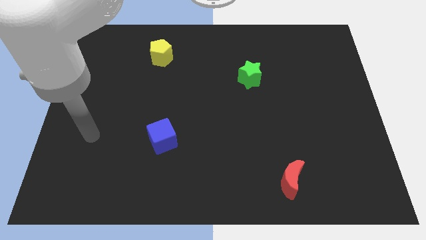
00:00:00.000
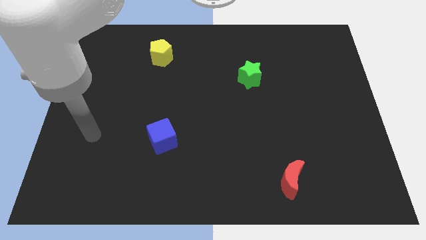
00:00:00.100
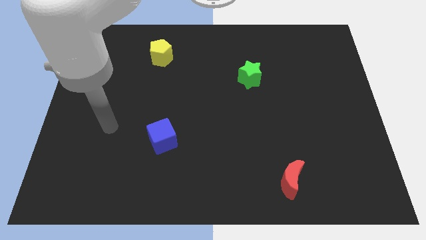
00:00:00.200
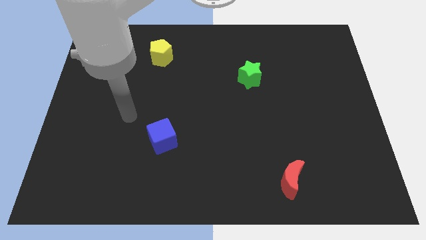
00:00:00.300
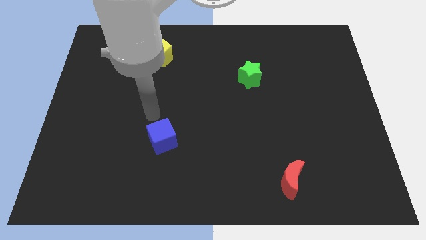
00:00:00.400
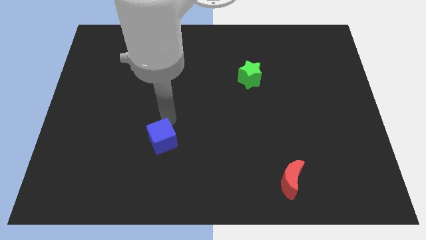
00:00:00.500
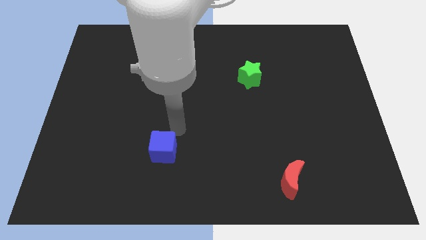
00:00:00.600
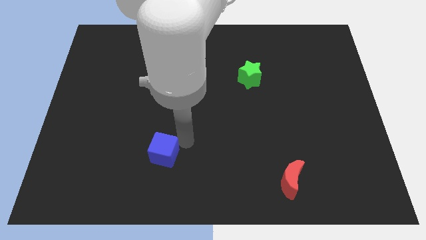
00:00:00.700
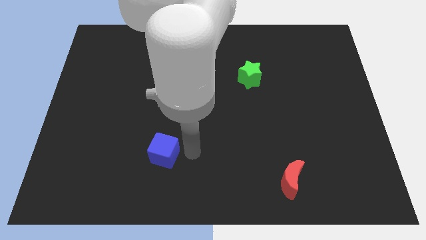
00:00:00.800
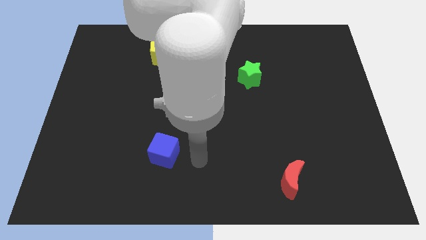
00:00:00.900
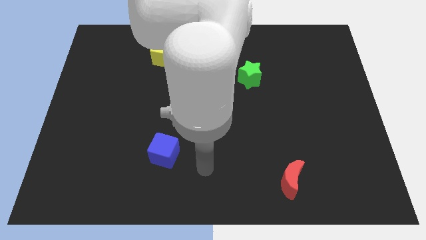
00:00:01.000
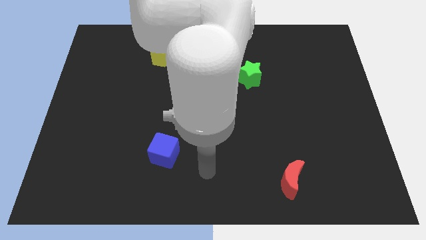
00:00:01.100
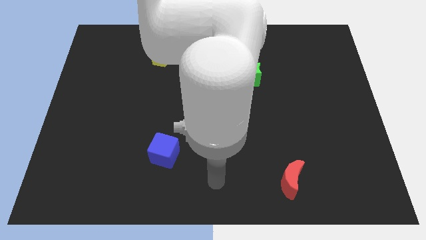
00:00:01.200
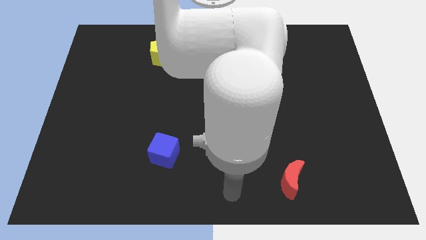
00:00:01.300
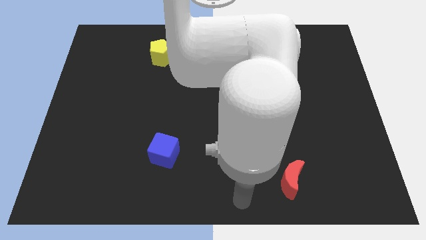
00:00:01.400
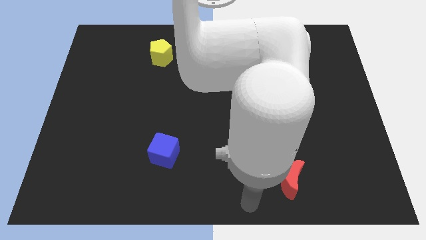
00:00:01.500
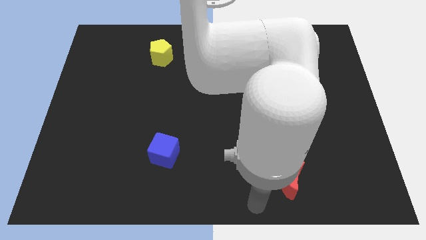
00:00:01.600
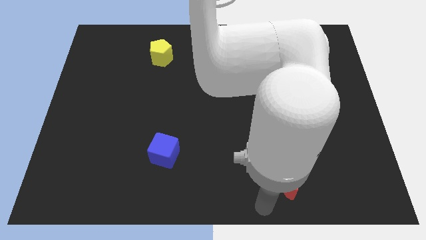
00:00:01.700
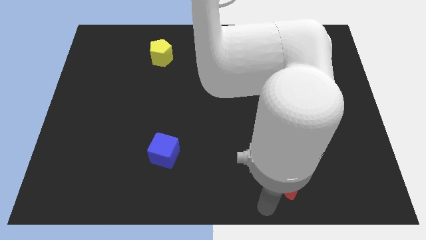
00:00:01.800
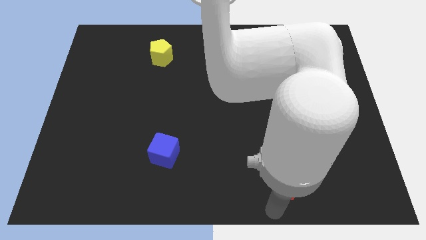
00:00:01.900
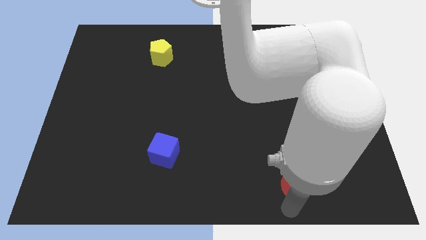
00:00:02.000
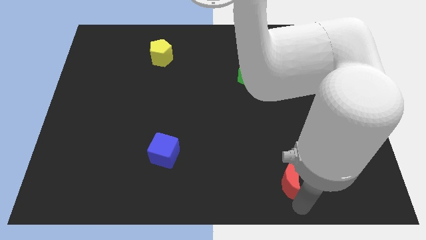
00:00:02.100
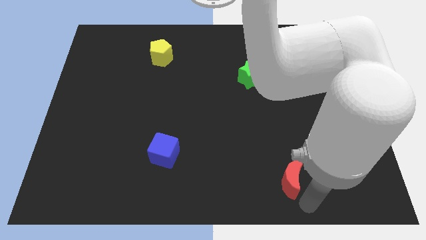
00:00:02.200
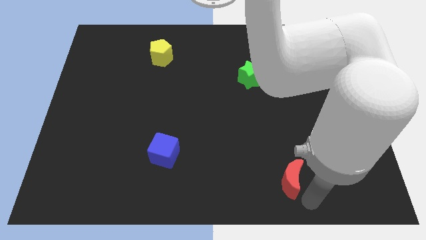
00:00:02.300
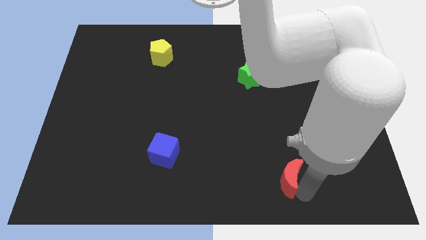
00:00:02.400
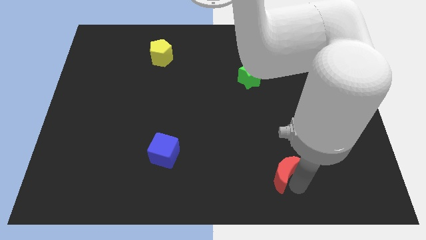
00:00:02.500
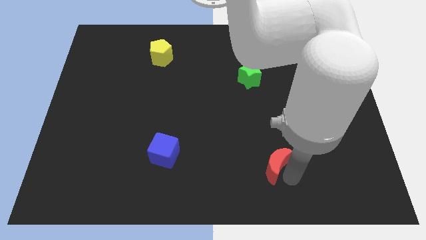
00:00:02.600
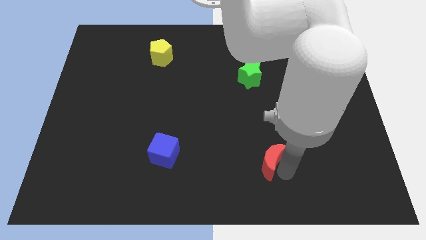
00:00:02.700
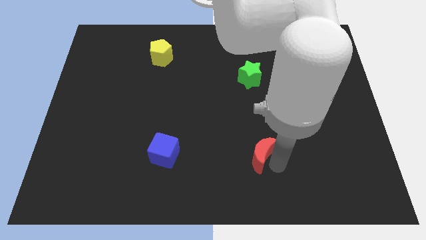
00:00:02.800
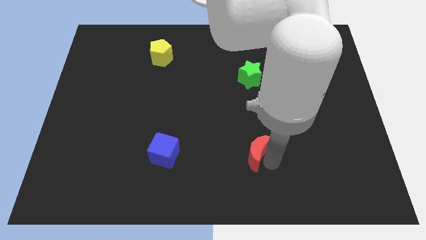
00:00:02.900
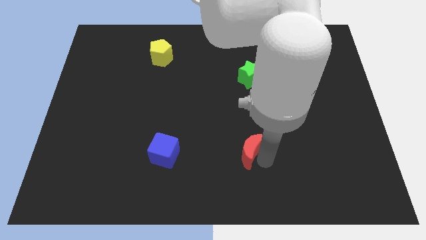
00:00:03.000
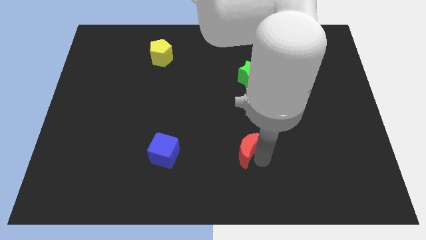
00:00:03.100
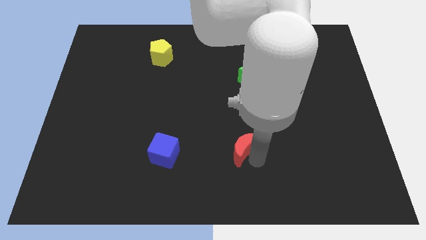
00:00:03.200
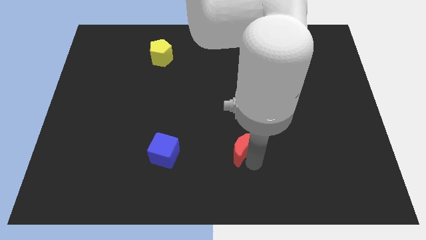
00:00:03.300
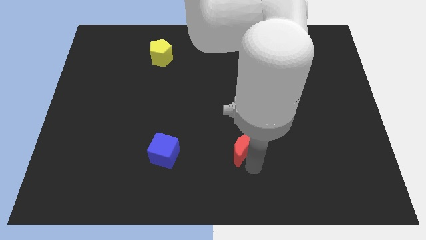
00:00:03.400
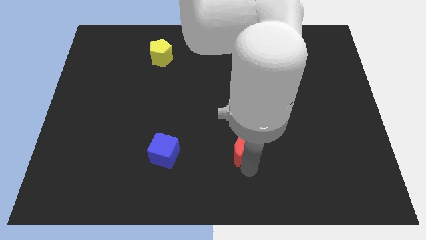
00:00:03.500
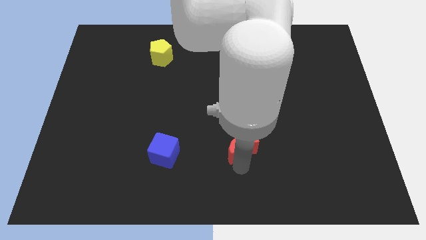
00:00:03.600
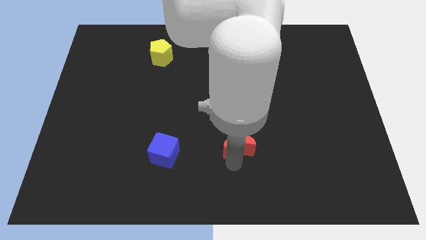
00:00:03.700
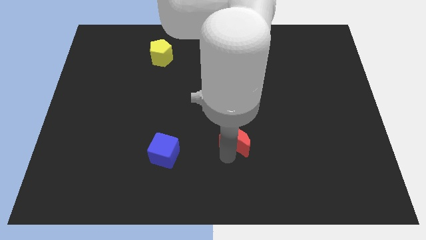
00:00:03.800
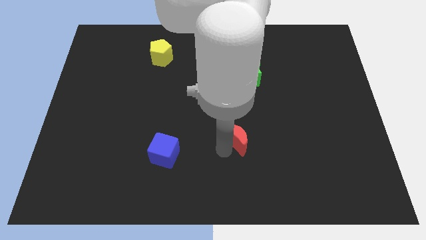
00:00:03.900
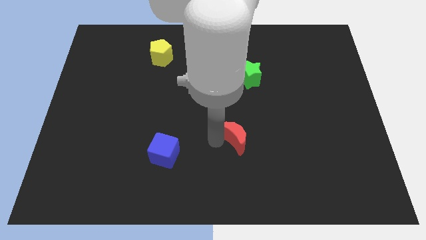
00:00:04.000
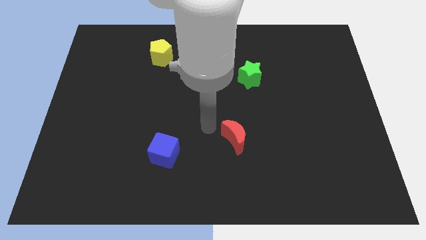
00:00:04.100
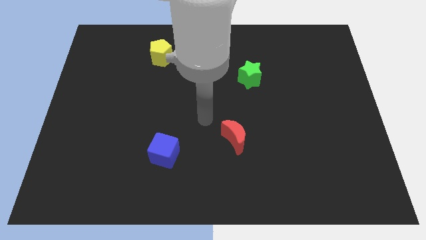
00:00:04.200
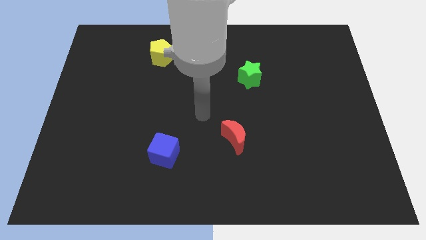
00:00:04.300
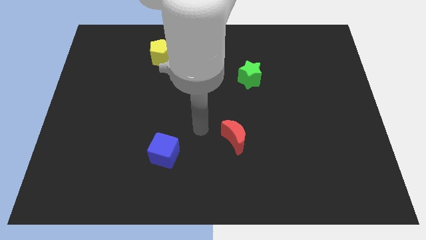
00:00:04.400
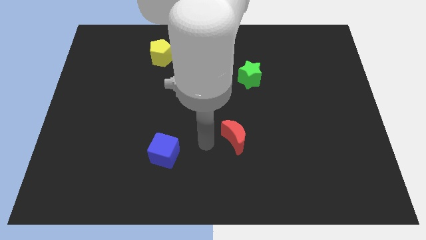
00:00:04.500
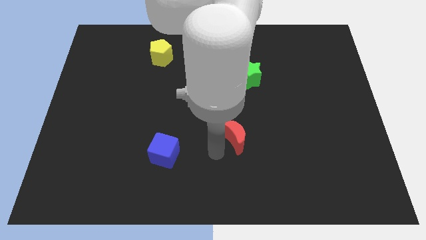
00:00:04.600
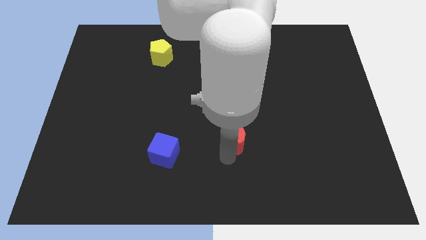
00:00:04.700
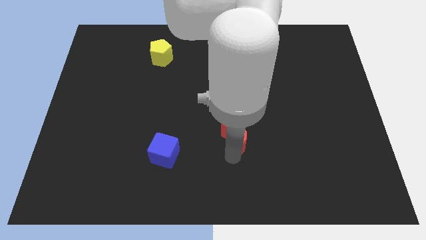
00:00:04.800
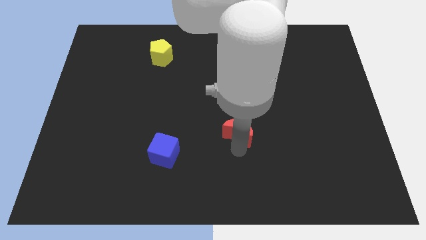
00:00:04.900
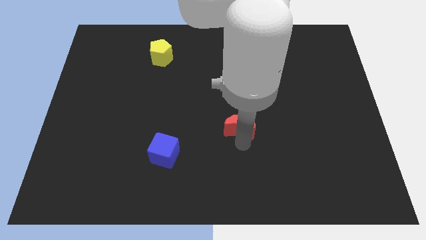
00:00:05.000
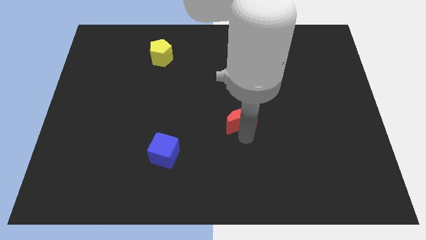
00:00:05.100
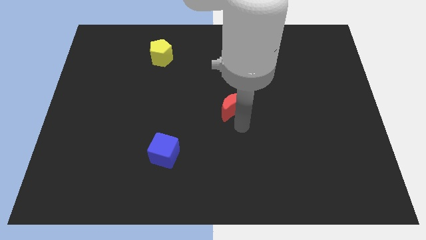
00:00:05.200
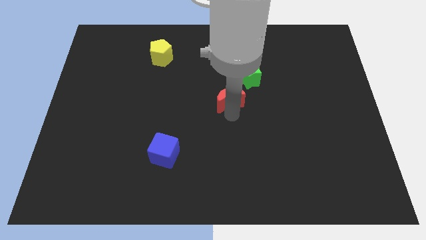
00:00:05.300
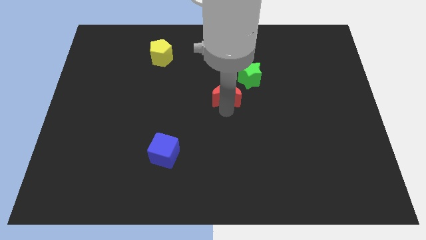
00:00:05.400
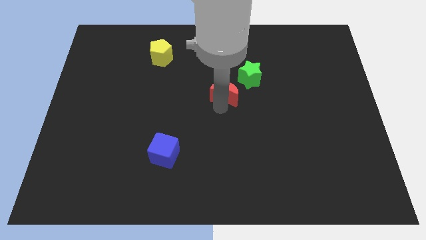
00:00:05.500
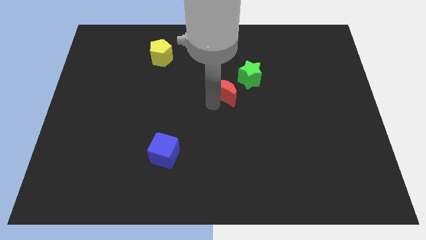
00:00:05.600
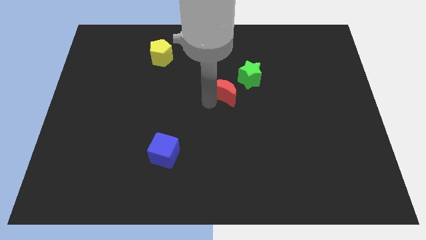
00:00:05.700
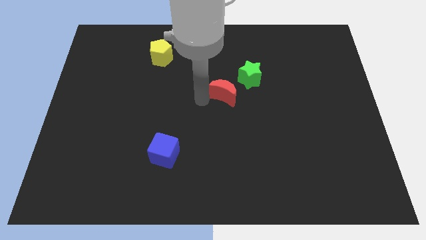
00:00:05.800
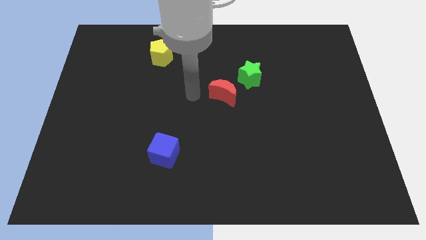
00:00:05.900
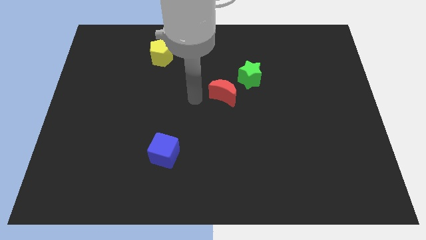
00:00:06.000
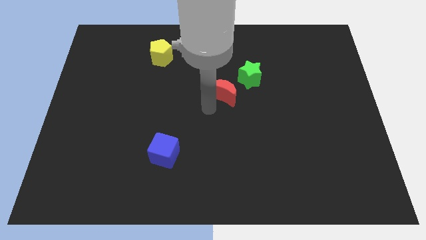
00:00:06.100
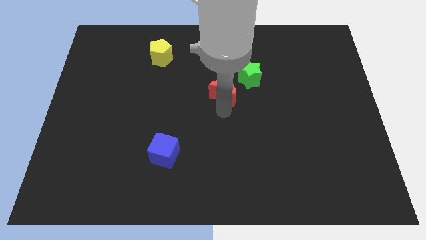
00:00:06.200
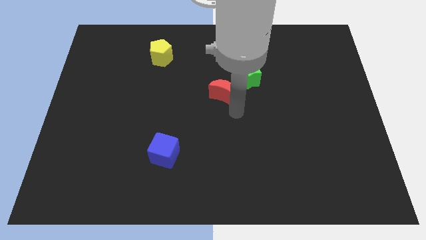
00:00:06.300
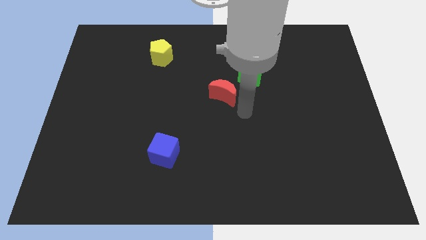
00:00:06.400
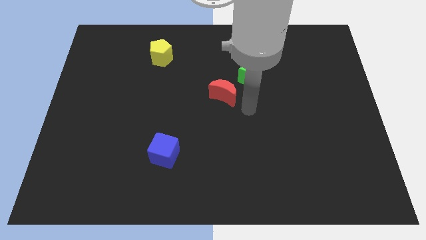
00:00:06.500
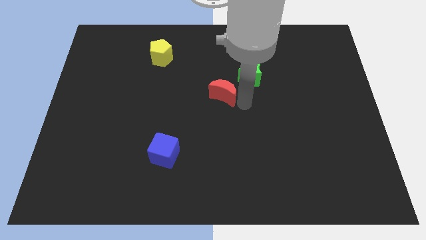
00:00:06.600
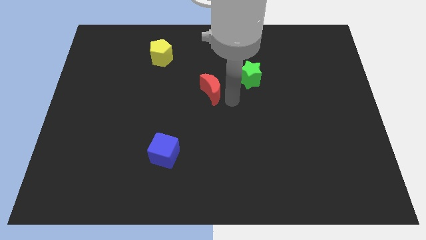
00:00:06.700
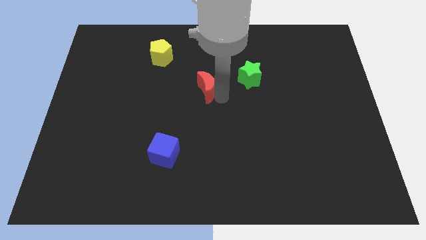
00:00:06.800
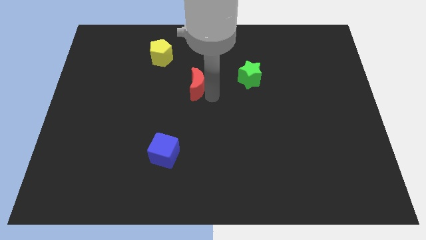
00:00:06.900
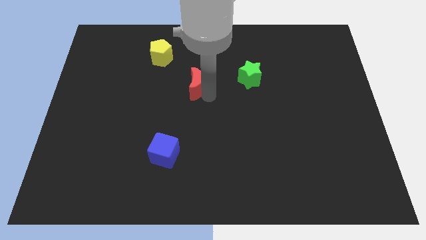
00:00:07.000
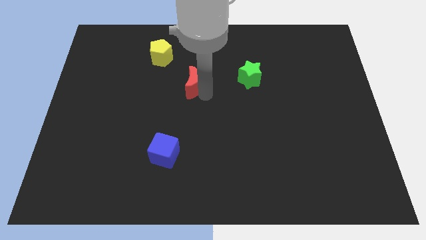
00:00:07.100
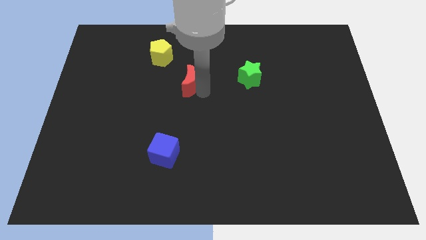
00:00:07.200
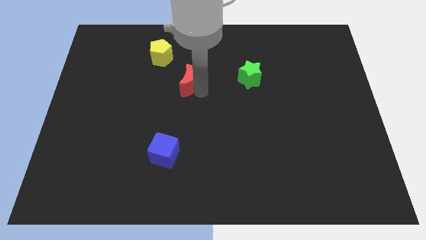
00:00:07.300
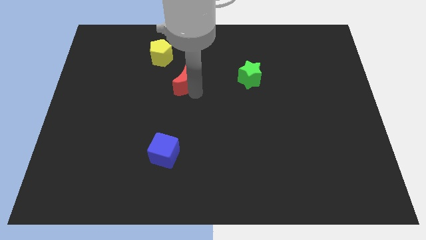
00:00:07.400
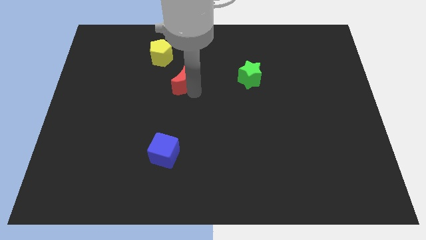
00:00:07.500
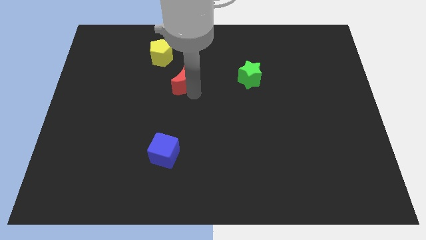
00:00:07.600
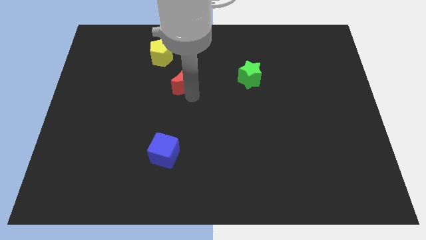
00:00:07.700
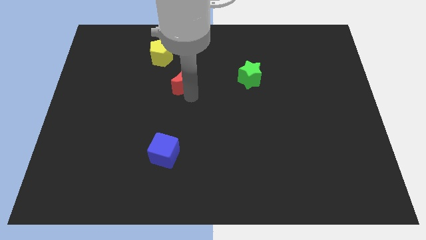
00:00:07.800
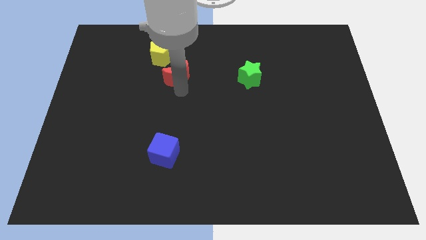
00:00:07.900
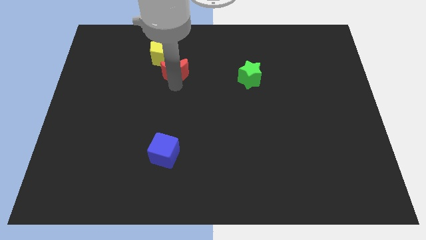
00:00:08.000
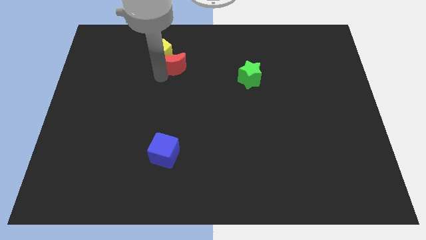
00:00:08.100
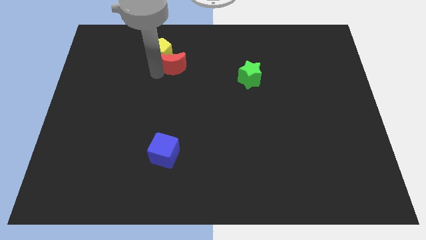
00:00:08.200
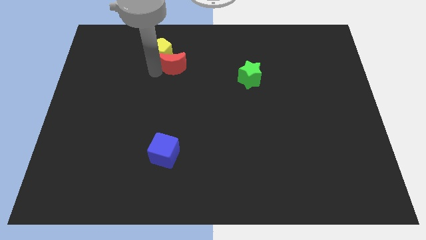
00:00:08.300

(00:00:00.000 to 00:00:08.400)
slide the moon close to the yellow block
